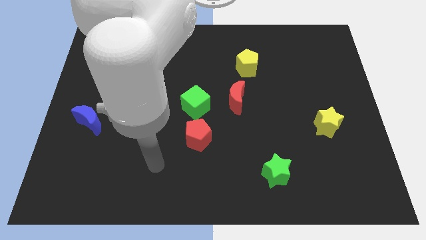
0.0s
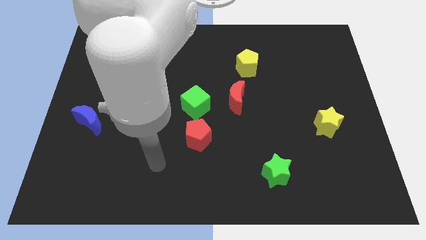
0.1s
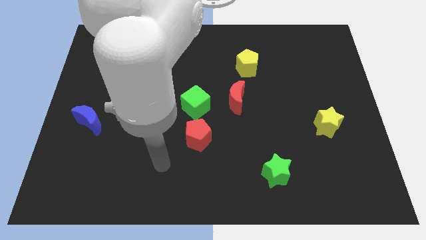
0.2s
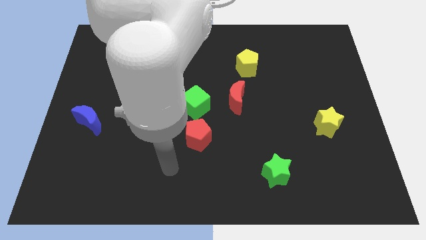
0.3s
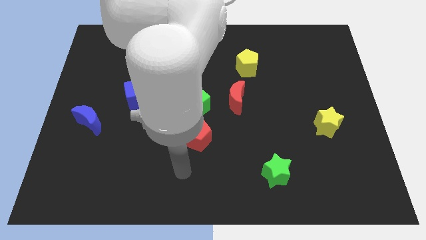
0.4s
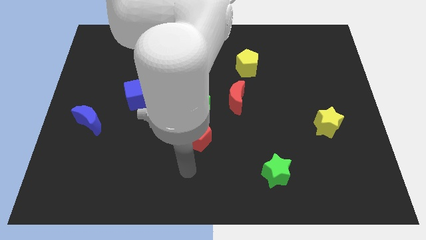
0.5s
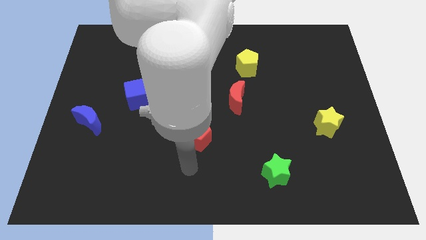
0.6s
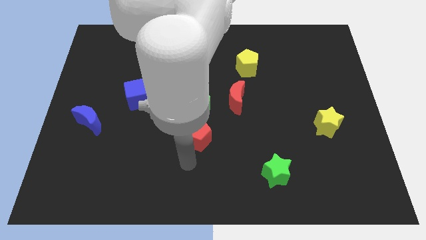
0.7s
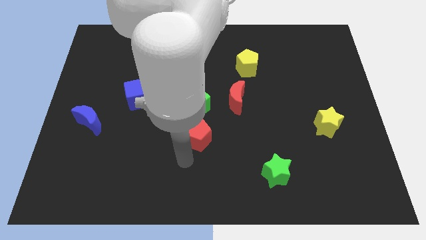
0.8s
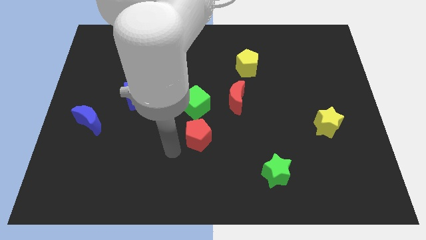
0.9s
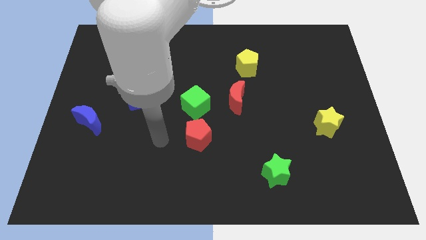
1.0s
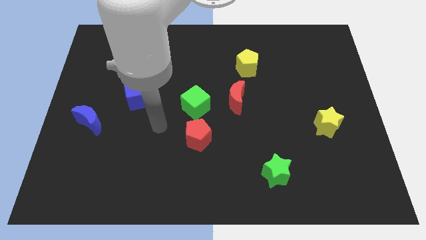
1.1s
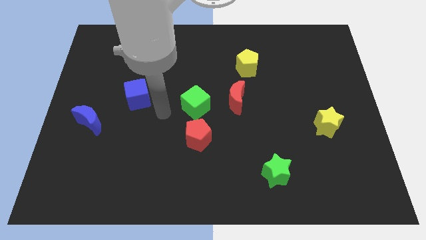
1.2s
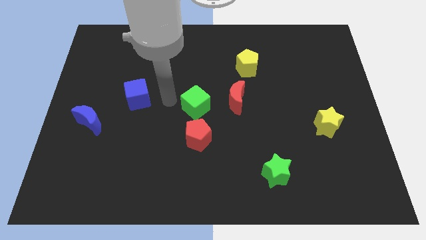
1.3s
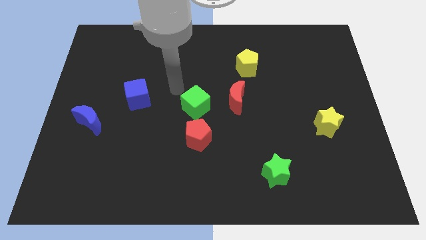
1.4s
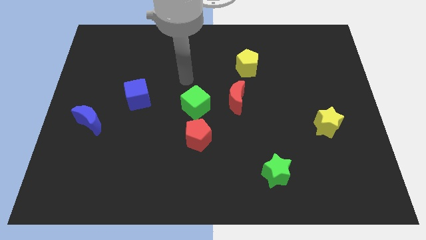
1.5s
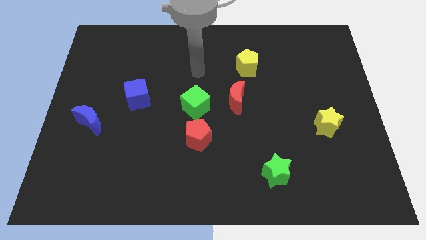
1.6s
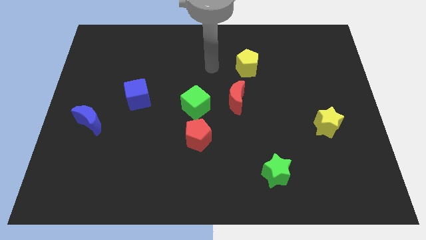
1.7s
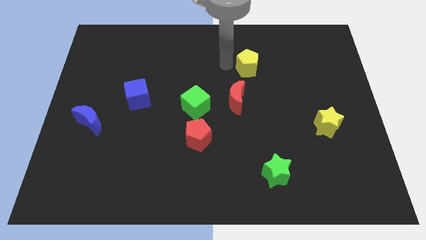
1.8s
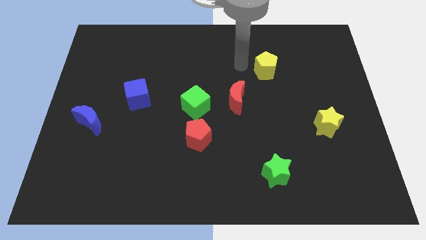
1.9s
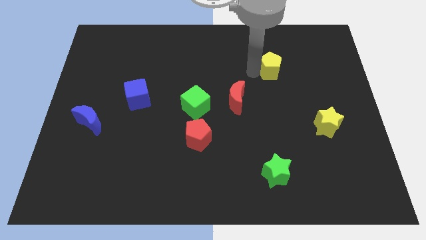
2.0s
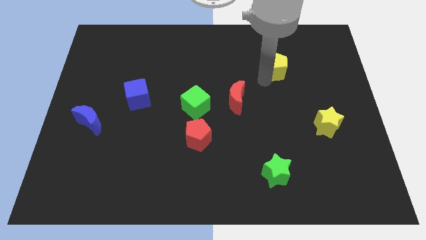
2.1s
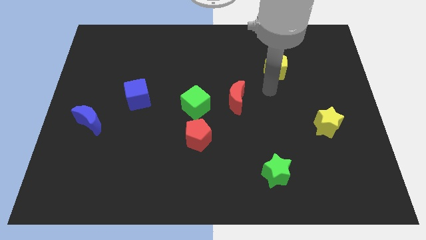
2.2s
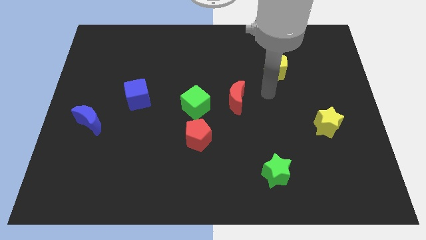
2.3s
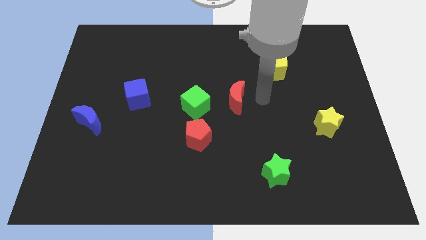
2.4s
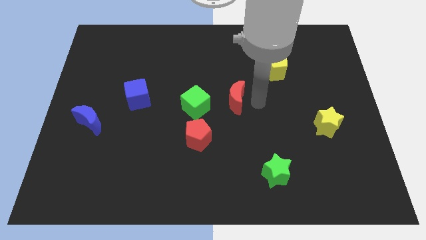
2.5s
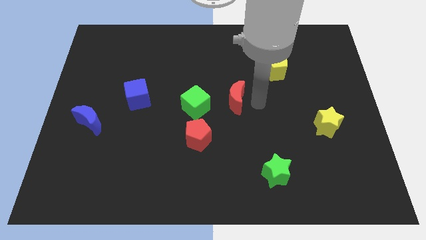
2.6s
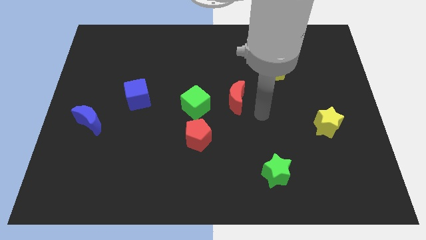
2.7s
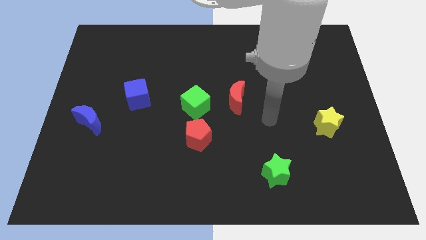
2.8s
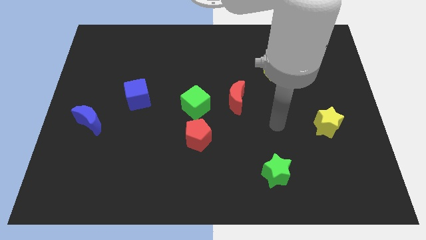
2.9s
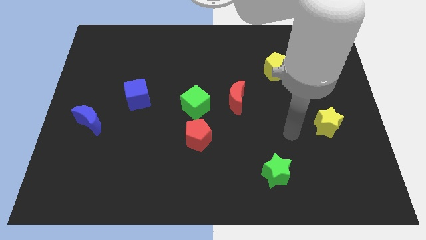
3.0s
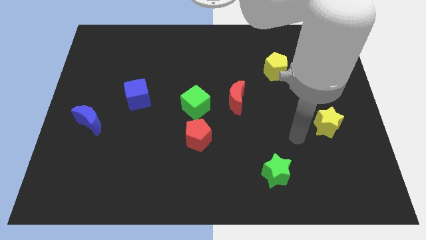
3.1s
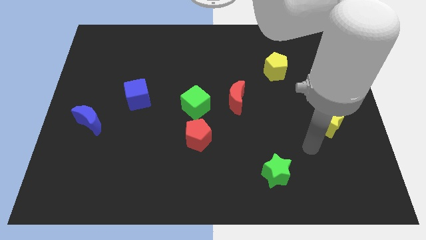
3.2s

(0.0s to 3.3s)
move the yellow pentagon diagonally to the red crescent

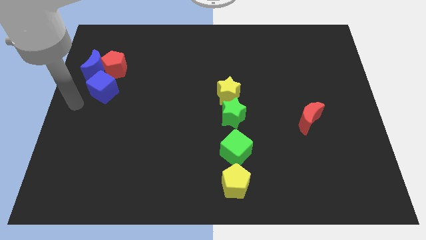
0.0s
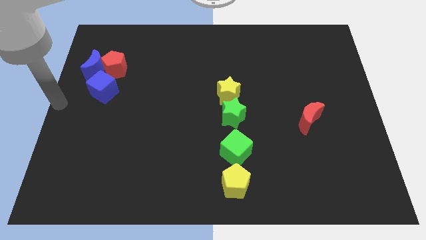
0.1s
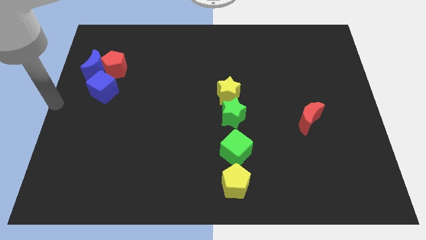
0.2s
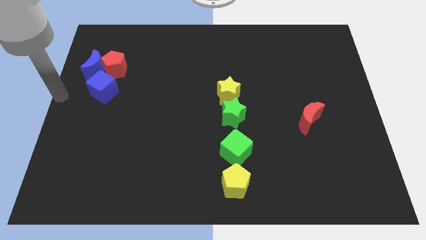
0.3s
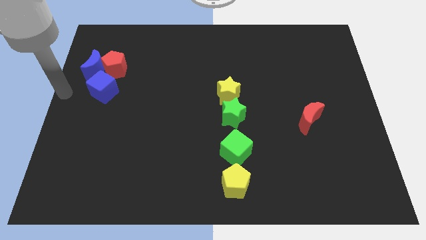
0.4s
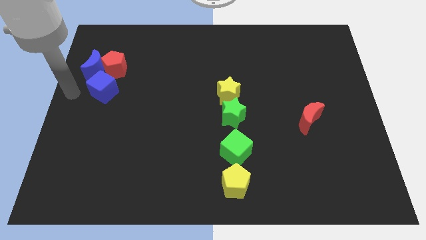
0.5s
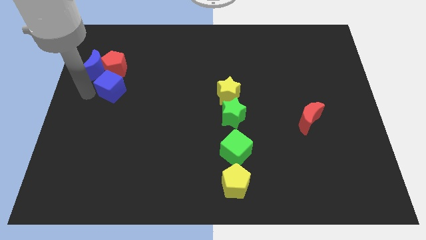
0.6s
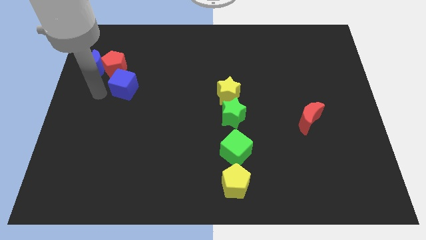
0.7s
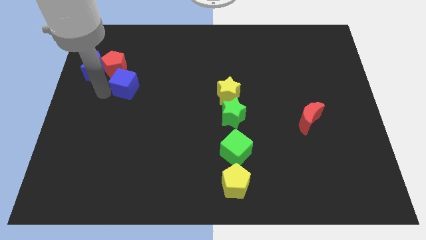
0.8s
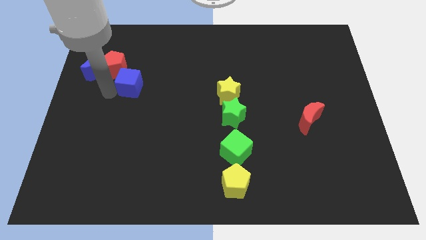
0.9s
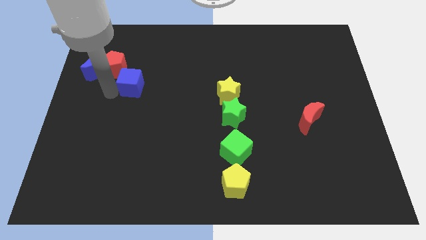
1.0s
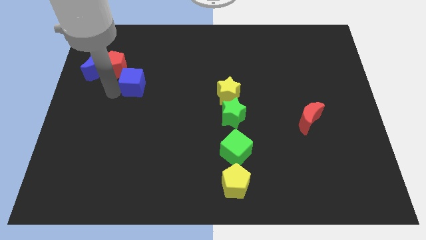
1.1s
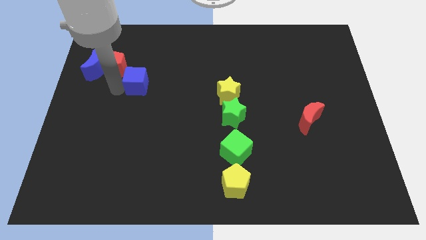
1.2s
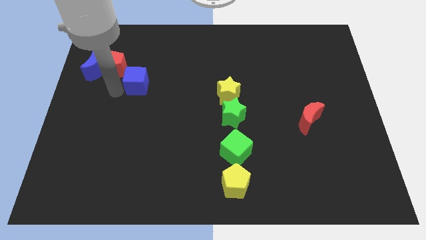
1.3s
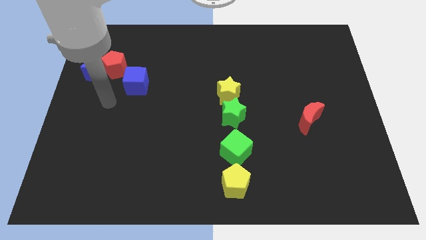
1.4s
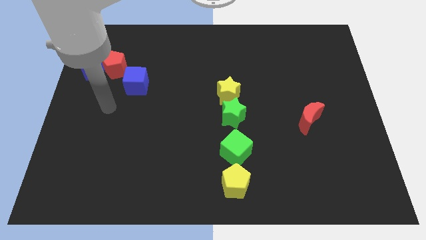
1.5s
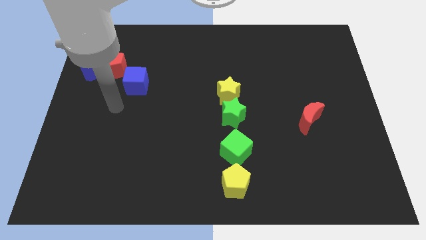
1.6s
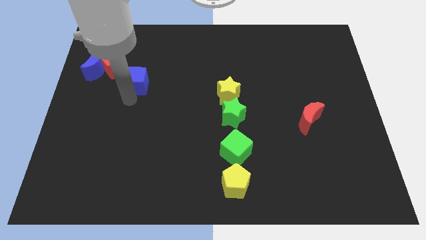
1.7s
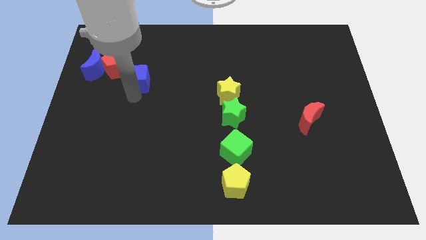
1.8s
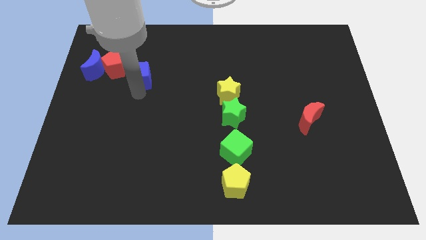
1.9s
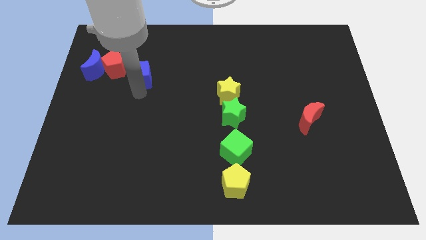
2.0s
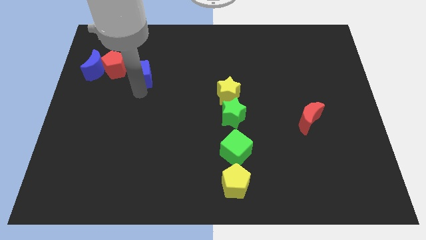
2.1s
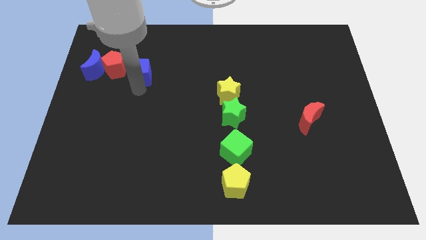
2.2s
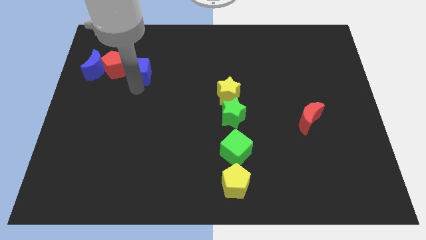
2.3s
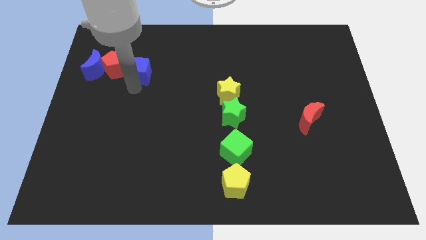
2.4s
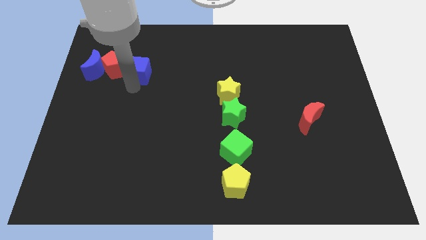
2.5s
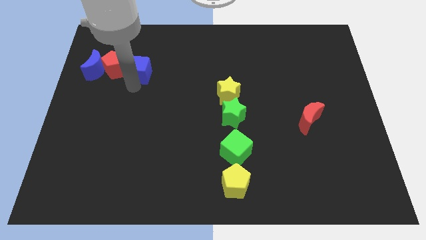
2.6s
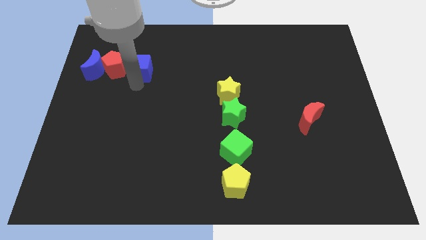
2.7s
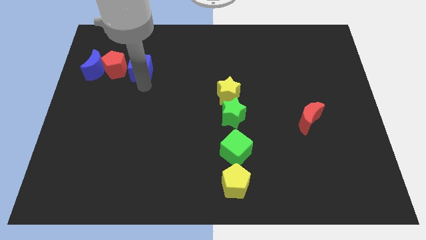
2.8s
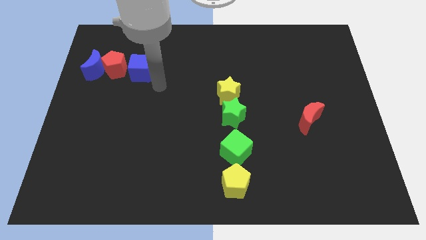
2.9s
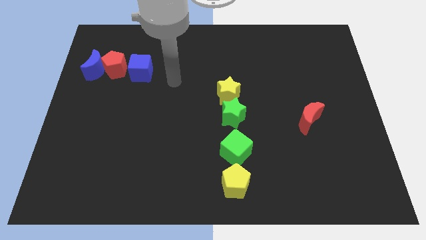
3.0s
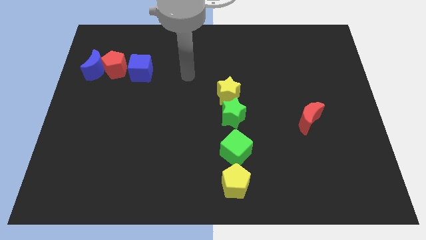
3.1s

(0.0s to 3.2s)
move the blue cube to the right of the red pentagon

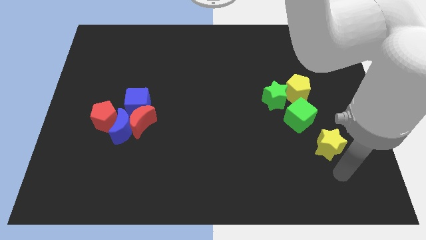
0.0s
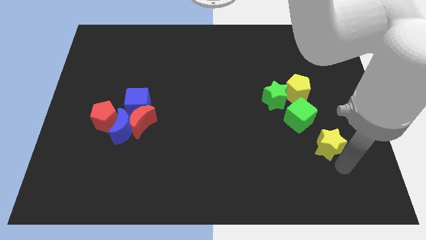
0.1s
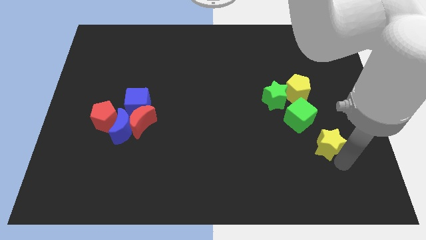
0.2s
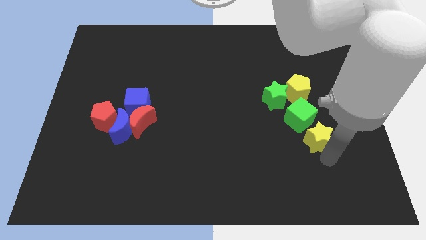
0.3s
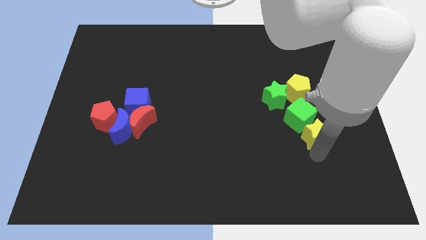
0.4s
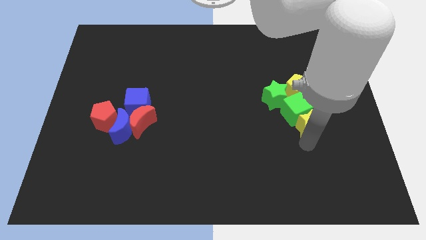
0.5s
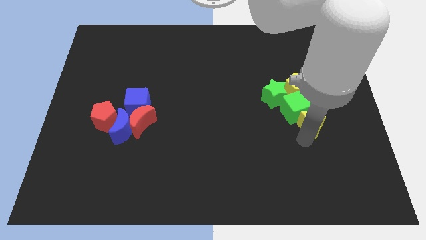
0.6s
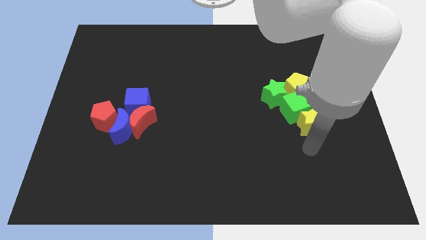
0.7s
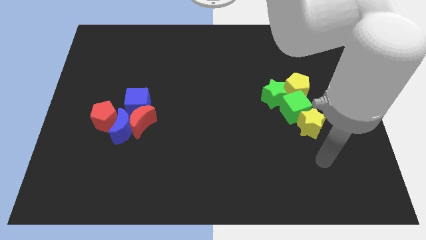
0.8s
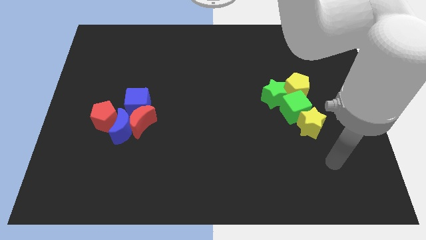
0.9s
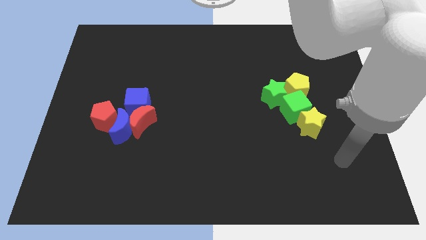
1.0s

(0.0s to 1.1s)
push the yellow star into the green cube

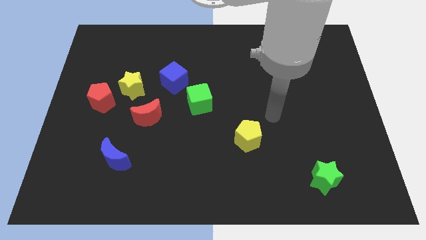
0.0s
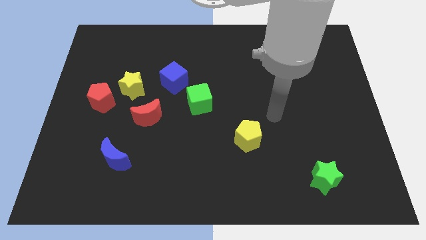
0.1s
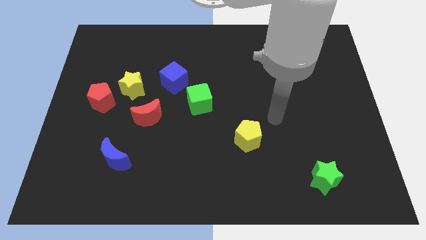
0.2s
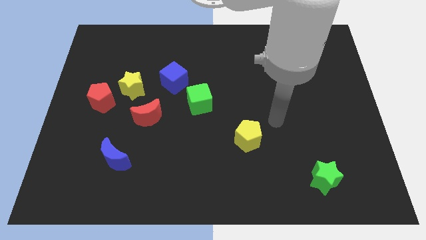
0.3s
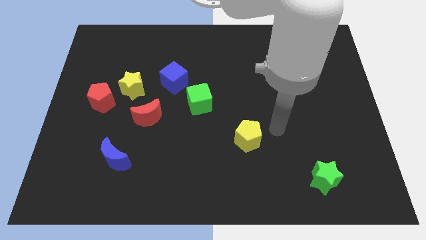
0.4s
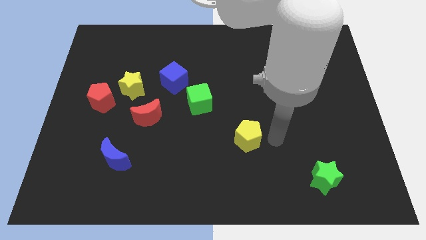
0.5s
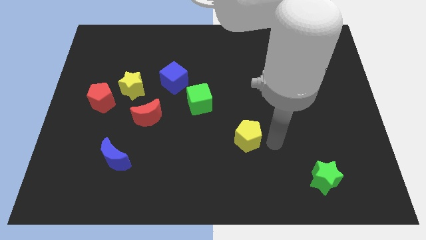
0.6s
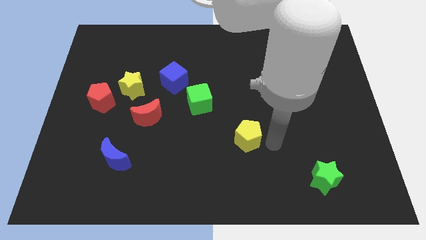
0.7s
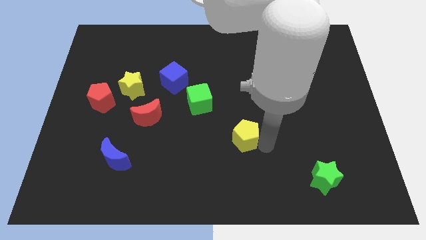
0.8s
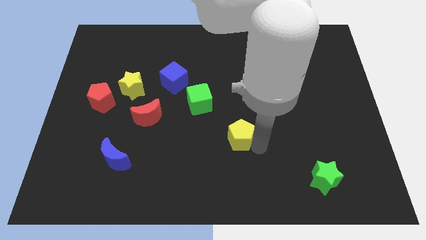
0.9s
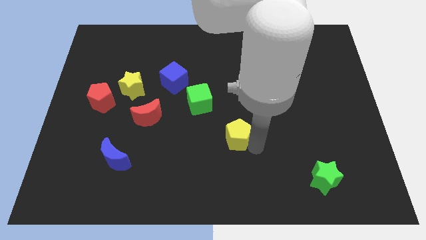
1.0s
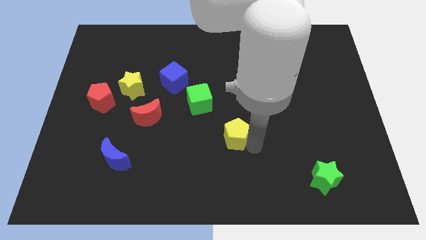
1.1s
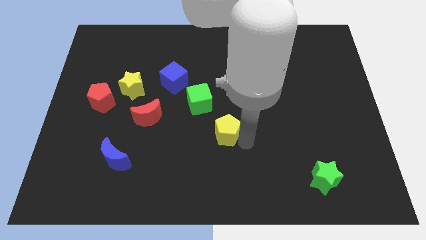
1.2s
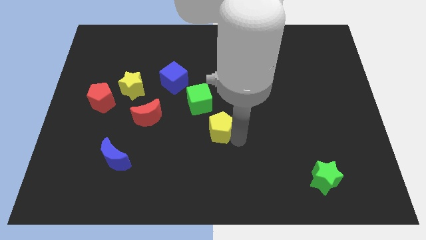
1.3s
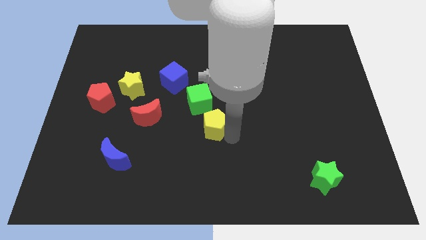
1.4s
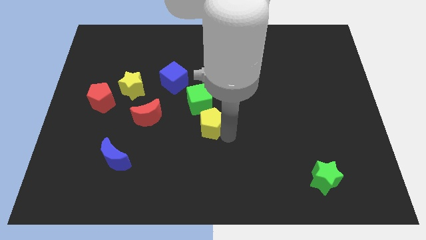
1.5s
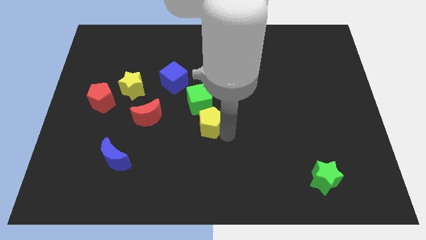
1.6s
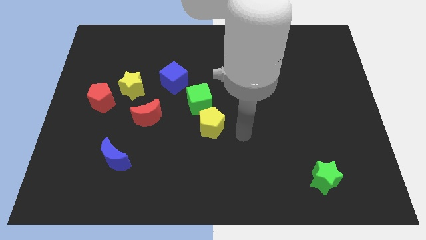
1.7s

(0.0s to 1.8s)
move the yellow pentagon below green cube
